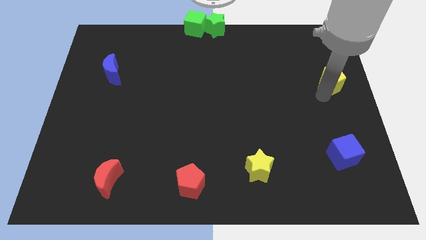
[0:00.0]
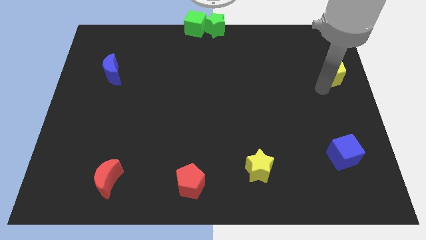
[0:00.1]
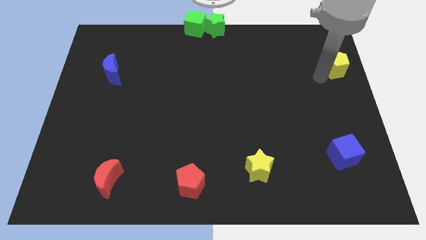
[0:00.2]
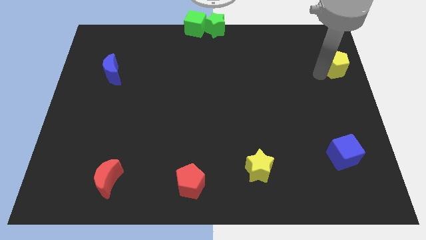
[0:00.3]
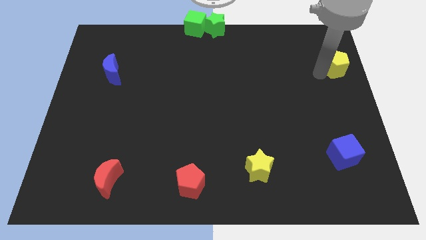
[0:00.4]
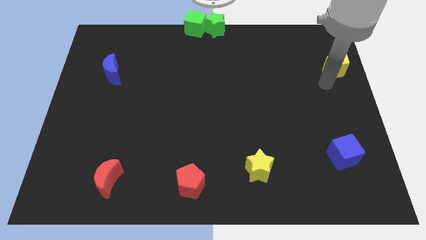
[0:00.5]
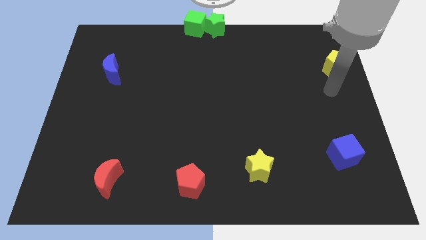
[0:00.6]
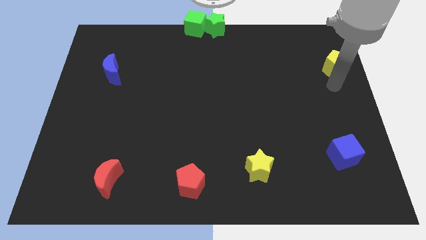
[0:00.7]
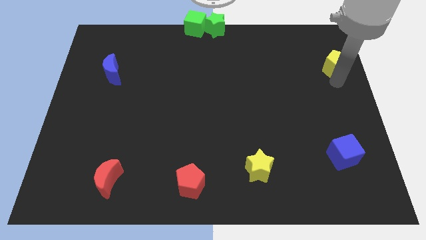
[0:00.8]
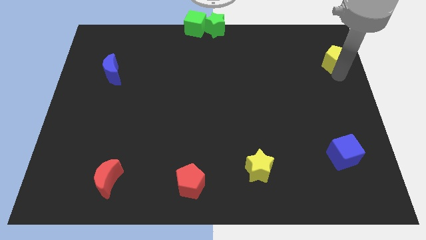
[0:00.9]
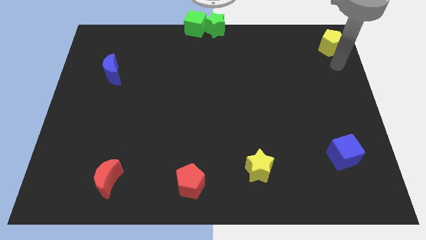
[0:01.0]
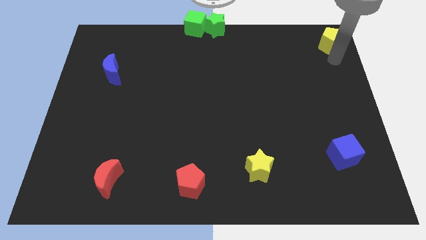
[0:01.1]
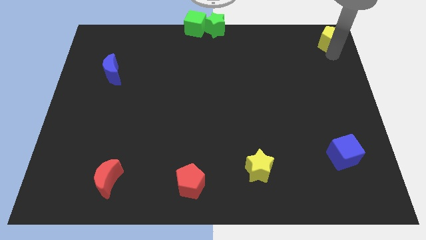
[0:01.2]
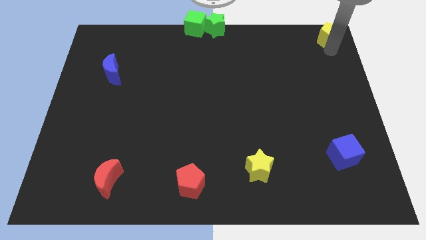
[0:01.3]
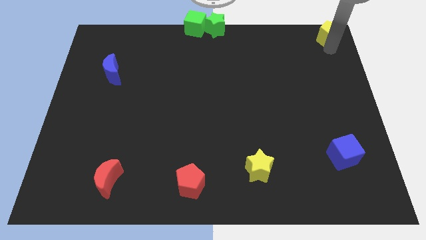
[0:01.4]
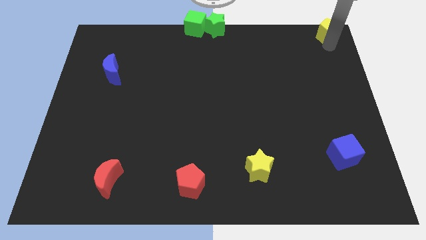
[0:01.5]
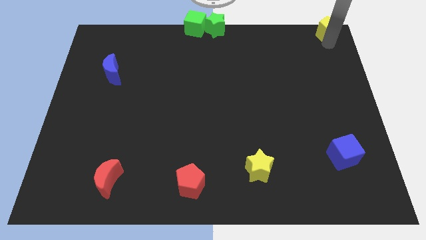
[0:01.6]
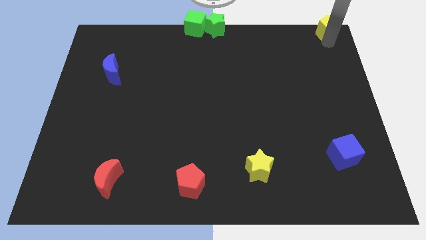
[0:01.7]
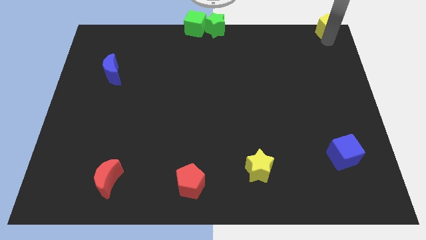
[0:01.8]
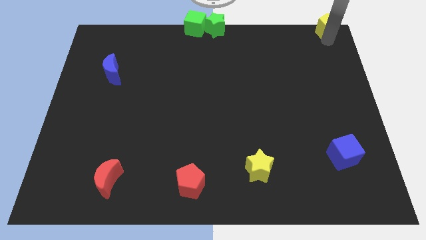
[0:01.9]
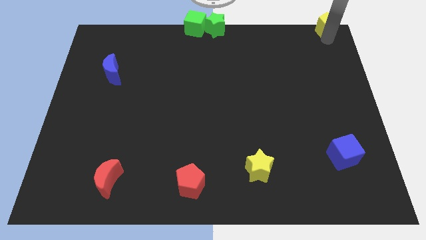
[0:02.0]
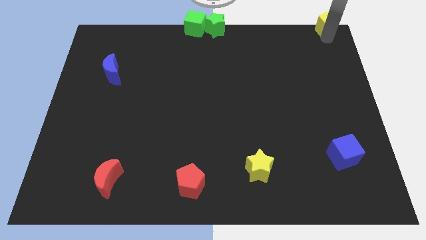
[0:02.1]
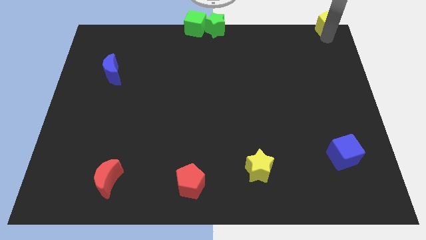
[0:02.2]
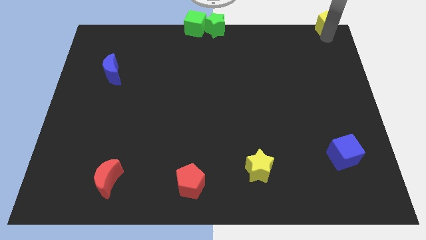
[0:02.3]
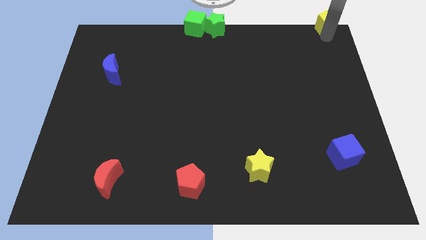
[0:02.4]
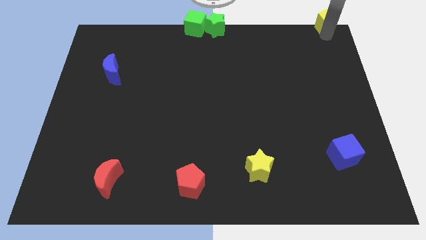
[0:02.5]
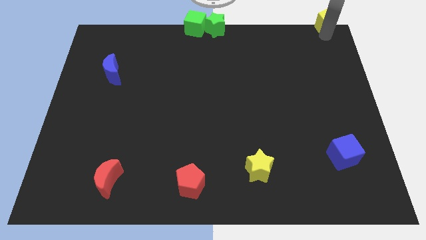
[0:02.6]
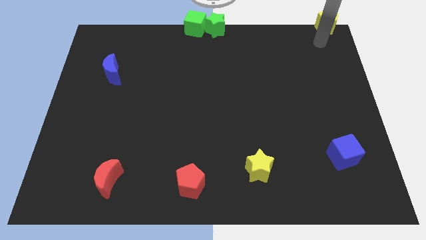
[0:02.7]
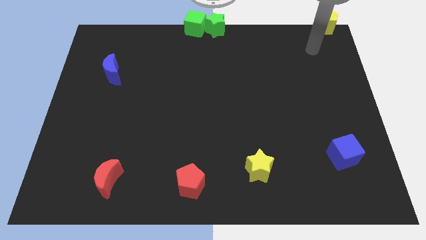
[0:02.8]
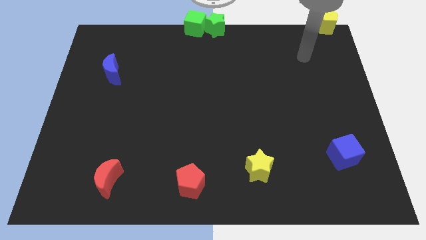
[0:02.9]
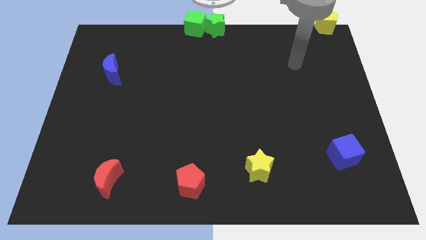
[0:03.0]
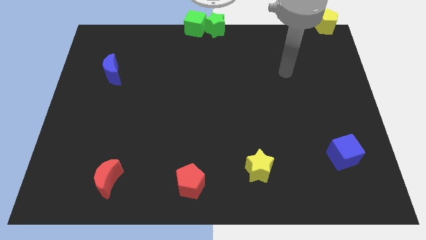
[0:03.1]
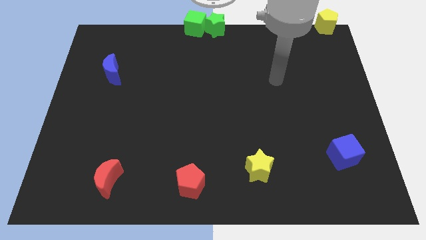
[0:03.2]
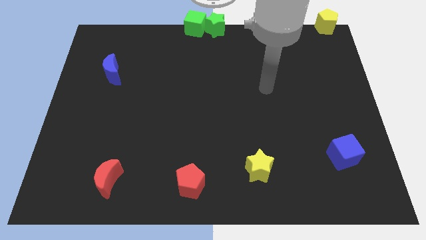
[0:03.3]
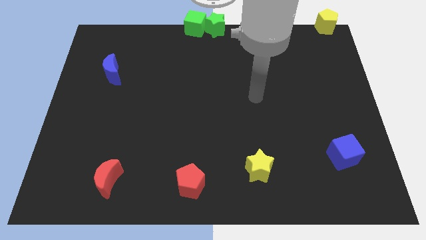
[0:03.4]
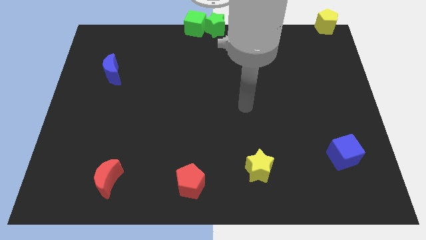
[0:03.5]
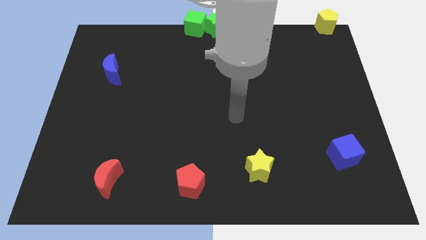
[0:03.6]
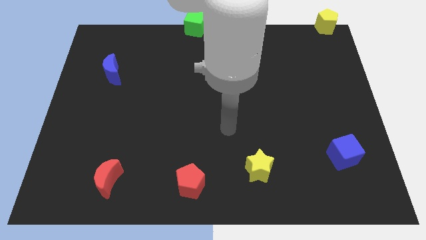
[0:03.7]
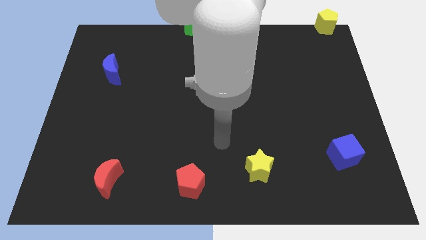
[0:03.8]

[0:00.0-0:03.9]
move the yellow pentagon parallel to green blocks

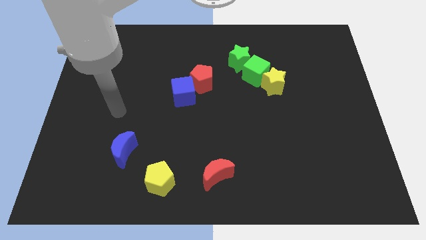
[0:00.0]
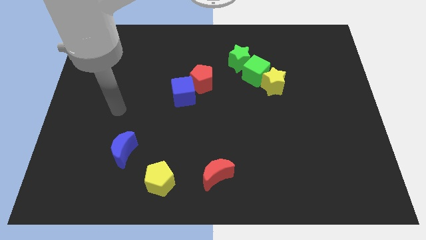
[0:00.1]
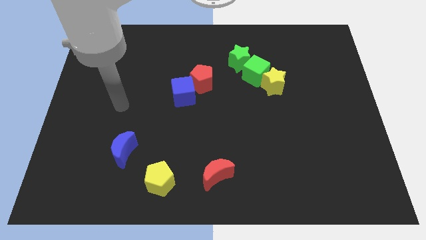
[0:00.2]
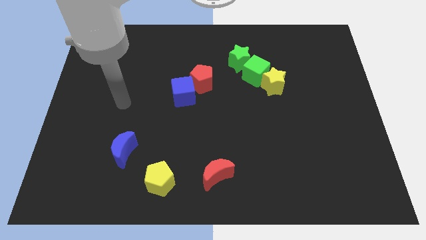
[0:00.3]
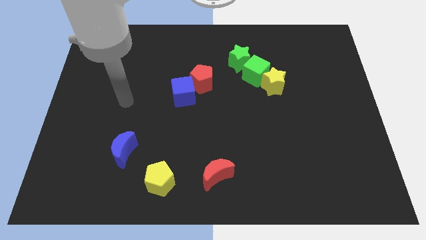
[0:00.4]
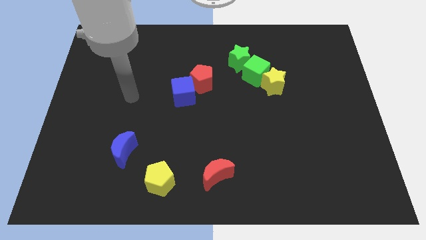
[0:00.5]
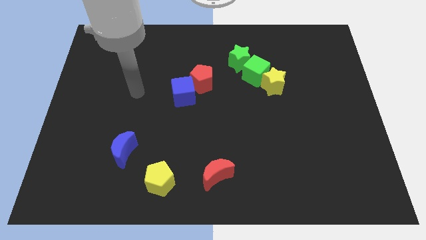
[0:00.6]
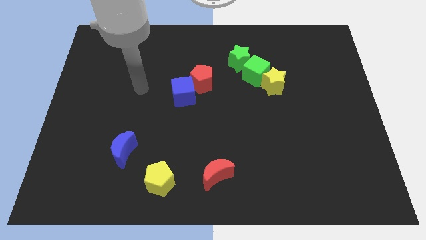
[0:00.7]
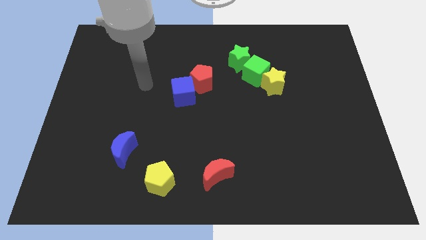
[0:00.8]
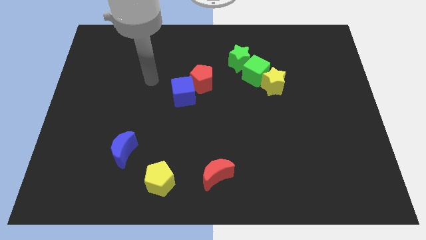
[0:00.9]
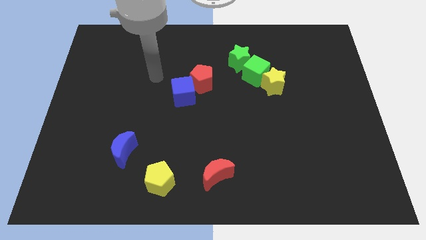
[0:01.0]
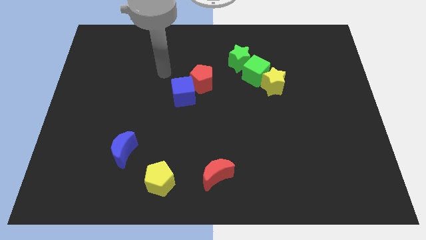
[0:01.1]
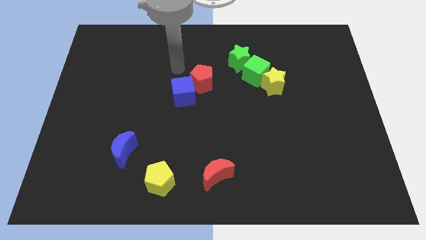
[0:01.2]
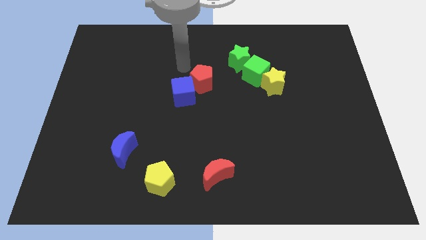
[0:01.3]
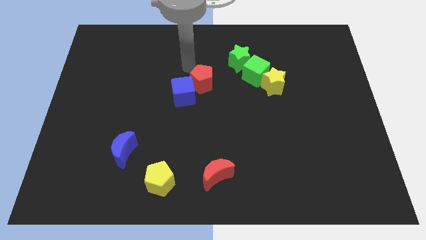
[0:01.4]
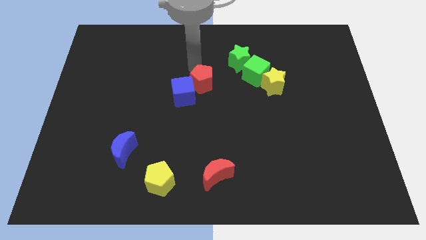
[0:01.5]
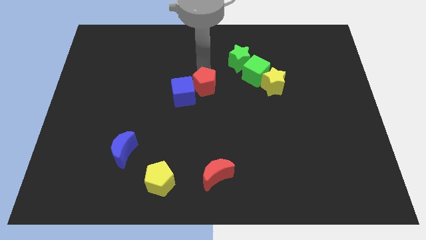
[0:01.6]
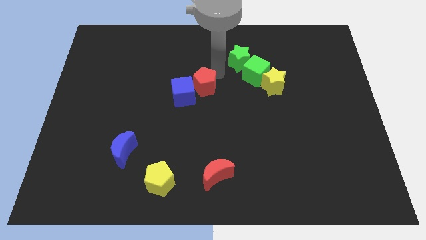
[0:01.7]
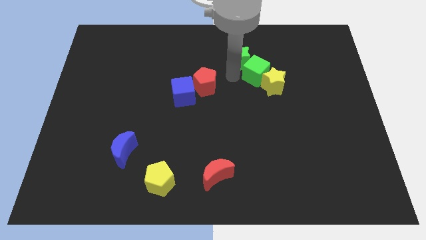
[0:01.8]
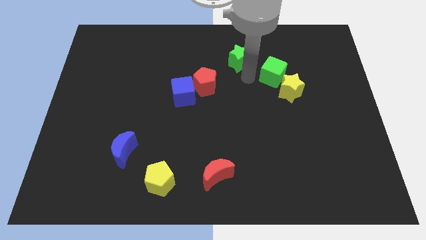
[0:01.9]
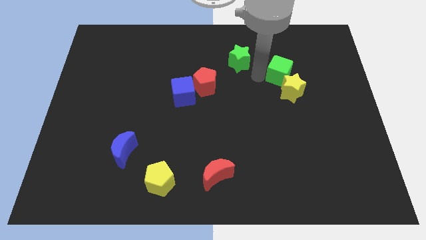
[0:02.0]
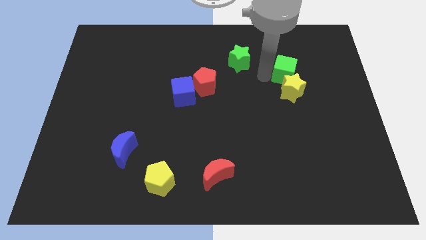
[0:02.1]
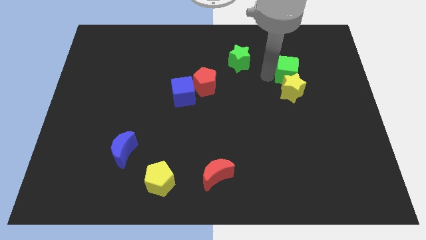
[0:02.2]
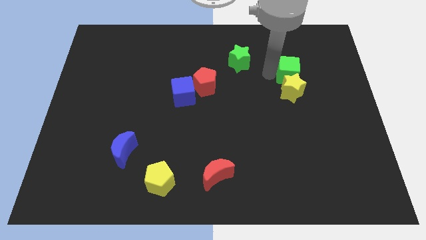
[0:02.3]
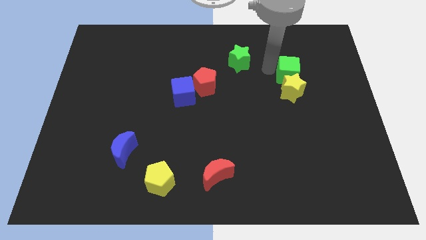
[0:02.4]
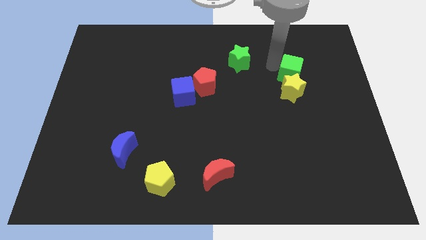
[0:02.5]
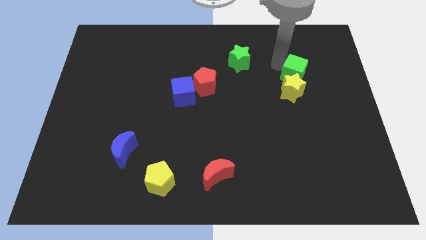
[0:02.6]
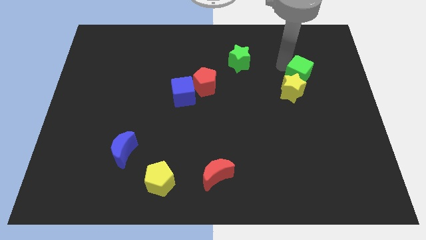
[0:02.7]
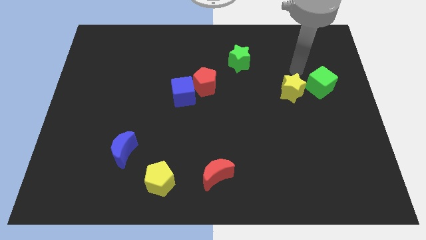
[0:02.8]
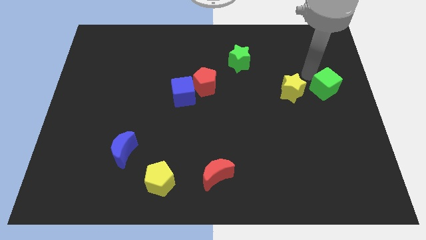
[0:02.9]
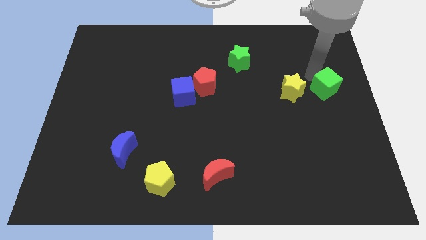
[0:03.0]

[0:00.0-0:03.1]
separate the green cube from green star and yellow star

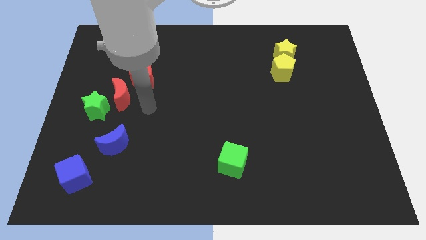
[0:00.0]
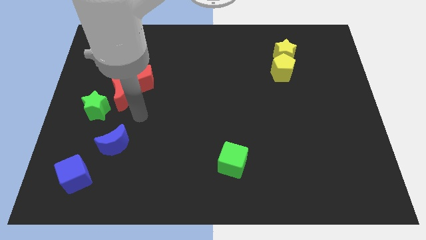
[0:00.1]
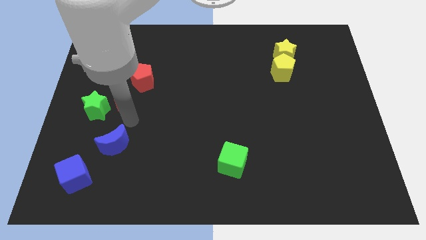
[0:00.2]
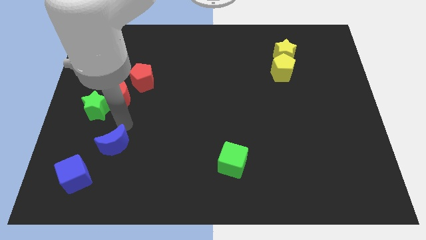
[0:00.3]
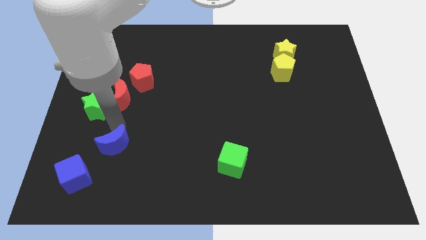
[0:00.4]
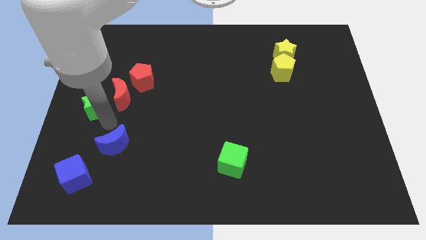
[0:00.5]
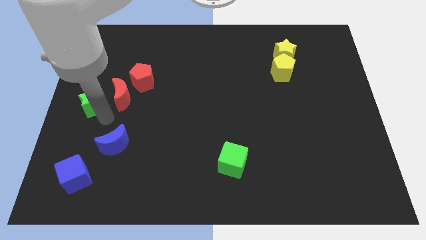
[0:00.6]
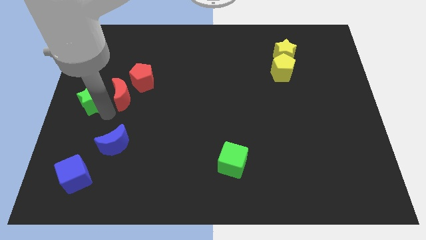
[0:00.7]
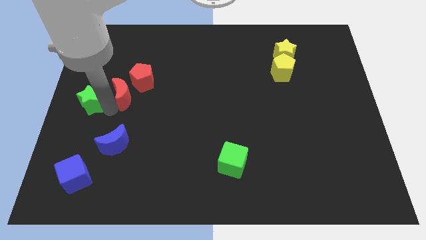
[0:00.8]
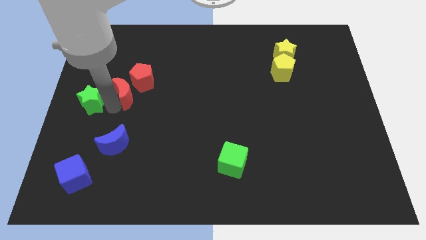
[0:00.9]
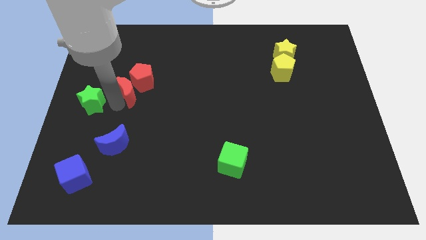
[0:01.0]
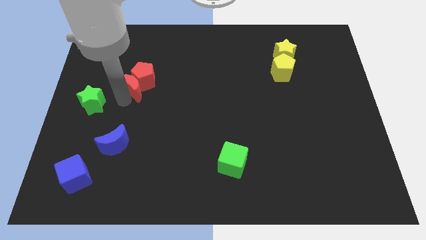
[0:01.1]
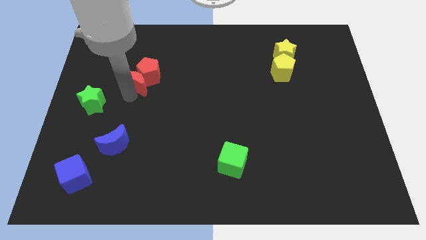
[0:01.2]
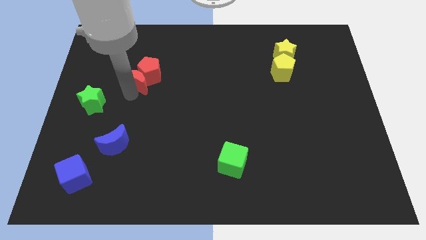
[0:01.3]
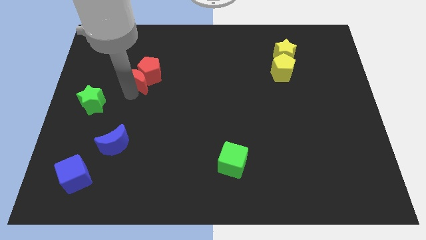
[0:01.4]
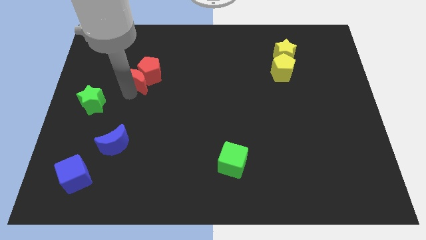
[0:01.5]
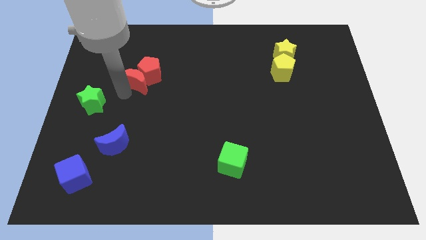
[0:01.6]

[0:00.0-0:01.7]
push the red crescent into the red pentagon

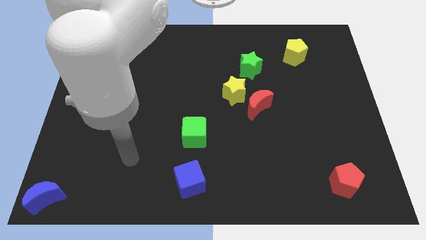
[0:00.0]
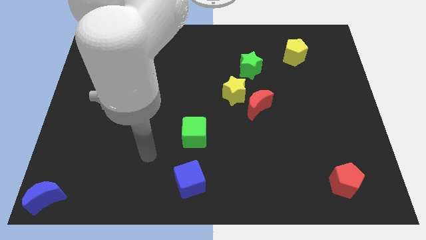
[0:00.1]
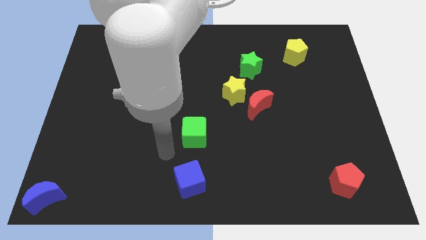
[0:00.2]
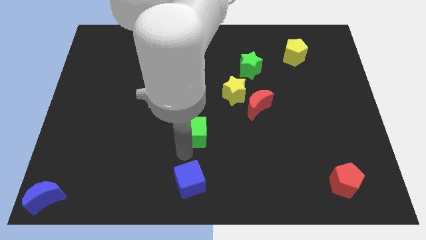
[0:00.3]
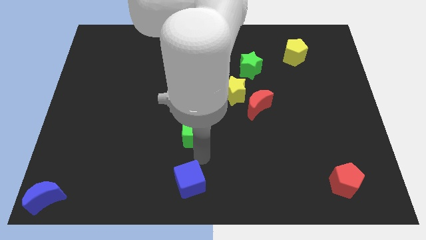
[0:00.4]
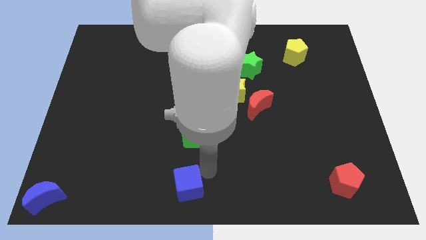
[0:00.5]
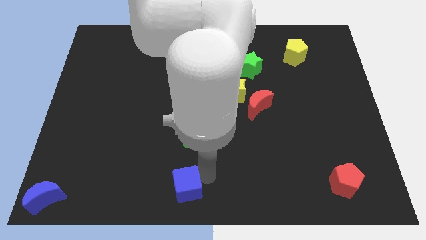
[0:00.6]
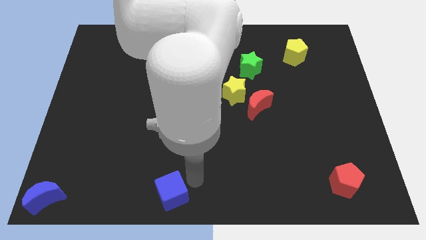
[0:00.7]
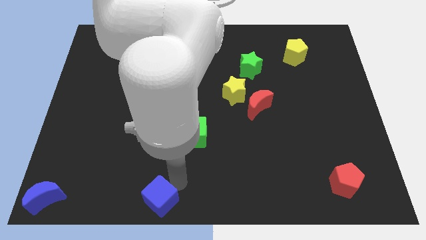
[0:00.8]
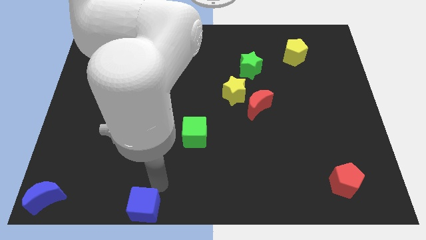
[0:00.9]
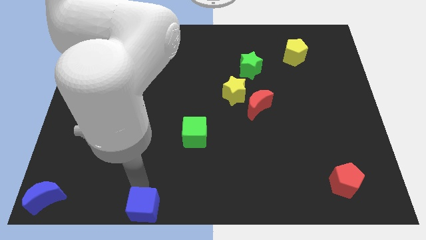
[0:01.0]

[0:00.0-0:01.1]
push blue cube horizontal to blue moon
